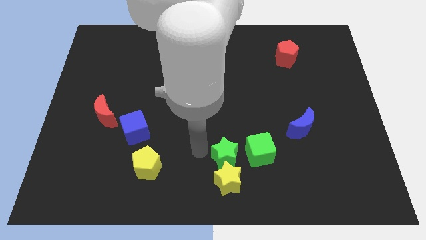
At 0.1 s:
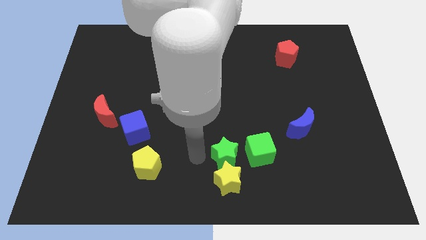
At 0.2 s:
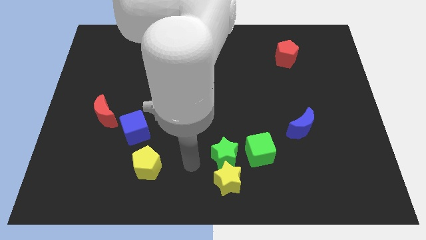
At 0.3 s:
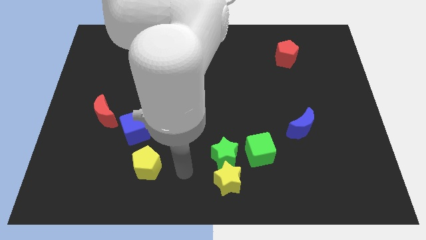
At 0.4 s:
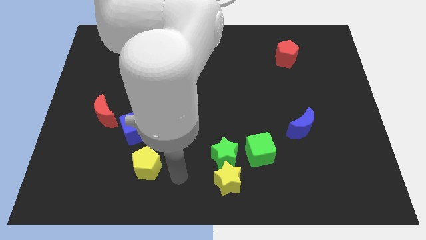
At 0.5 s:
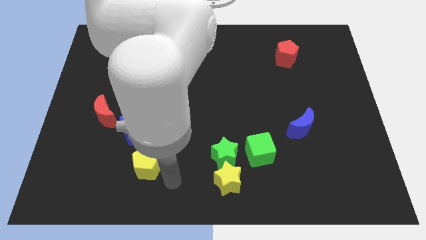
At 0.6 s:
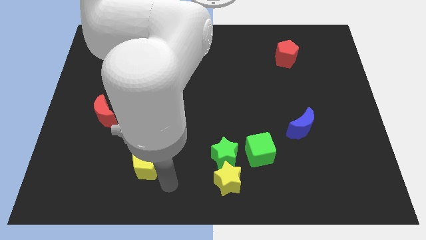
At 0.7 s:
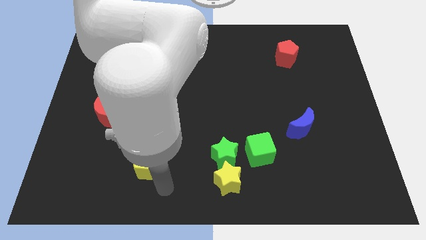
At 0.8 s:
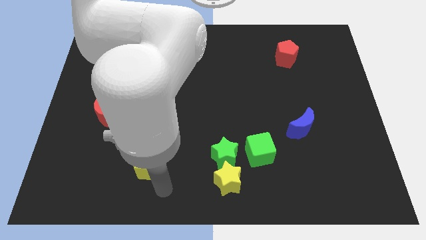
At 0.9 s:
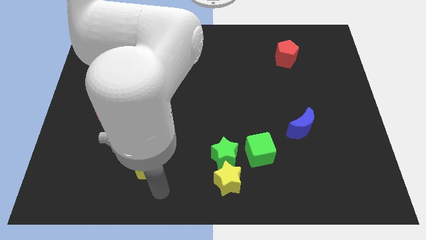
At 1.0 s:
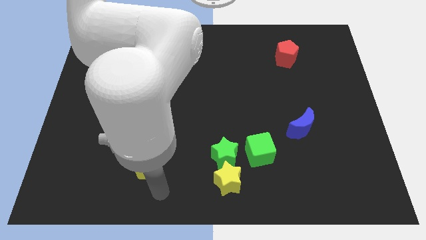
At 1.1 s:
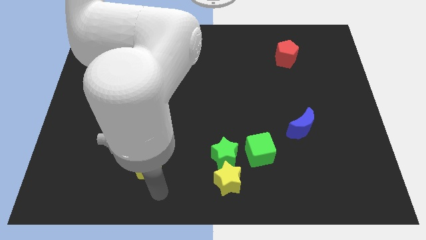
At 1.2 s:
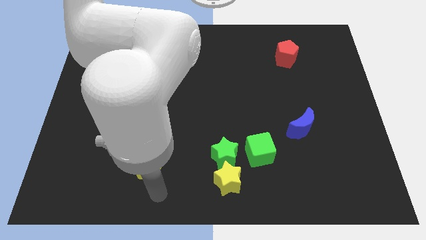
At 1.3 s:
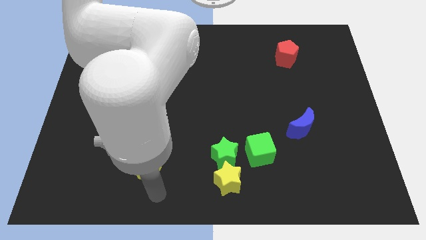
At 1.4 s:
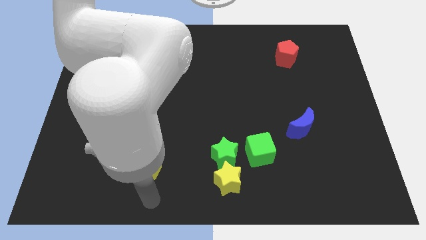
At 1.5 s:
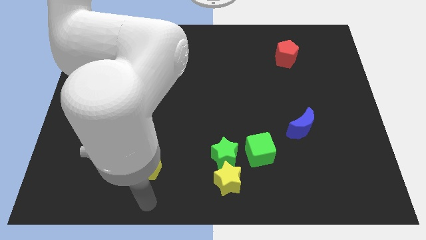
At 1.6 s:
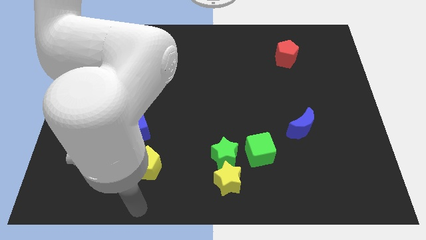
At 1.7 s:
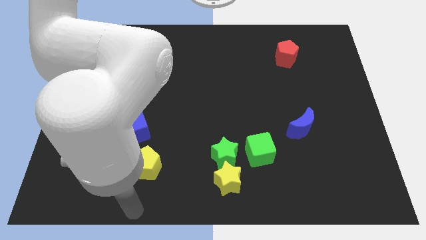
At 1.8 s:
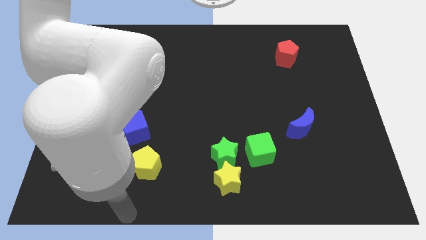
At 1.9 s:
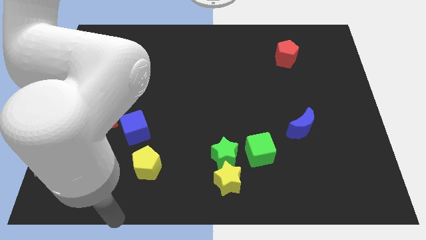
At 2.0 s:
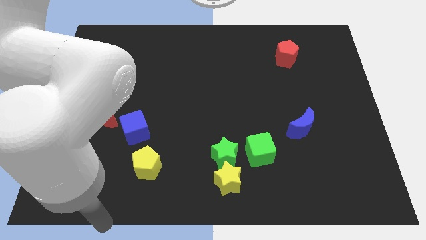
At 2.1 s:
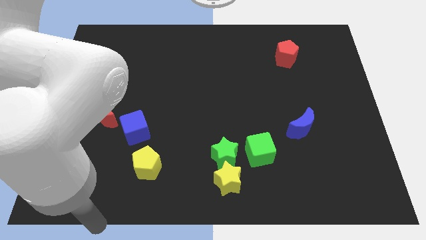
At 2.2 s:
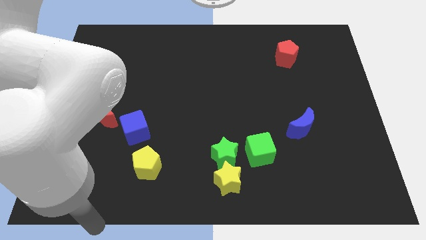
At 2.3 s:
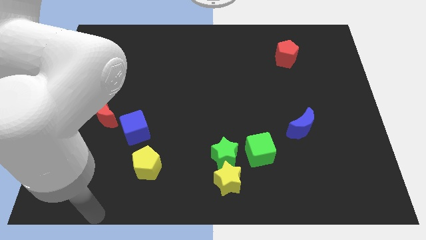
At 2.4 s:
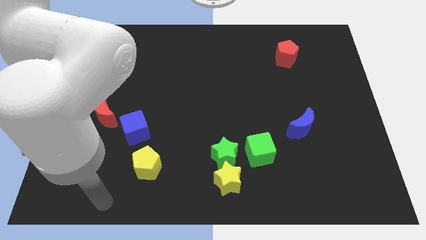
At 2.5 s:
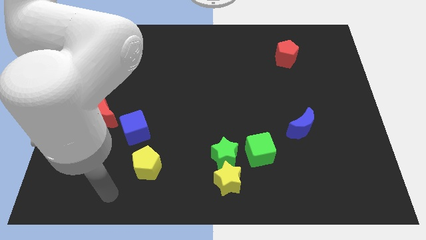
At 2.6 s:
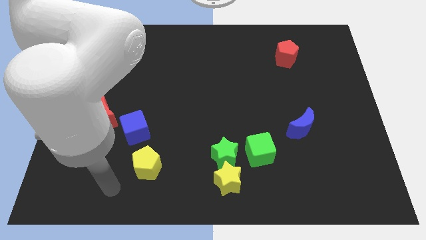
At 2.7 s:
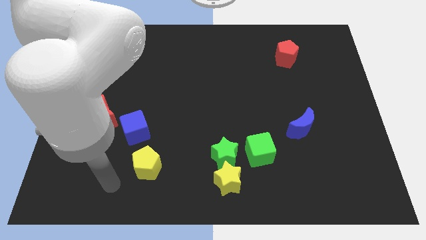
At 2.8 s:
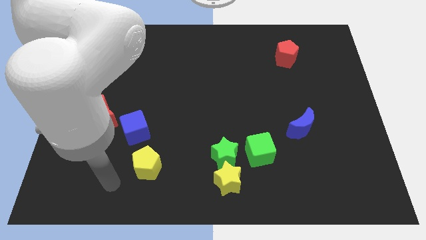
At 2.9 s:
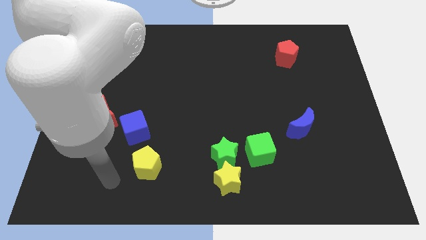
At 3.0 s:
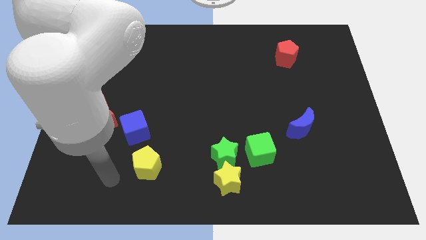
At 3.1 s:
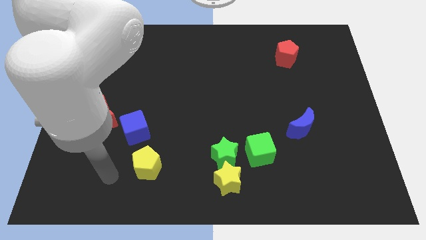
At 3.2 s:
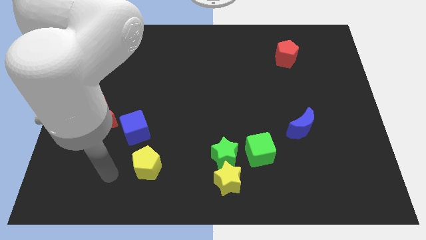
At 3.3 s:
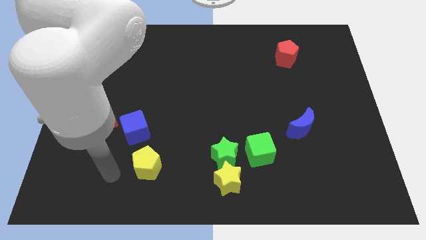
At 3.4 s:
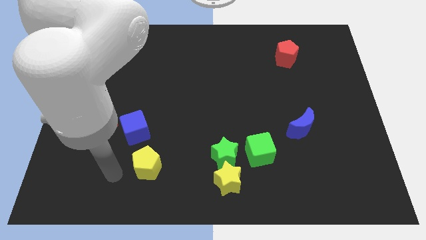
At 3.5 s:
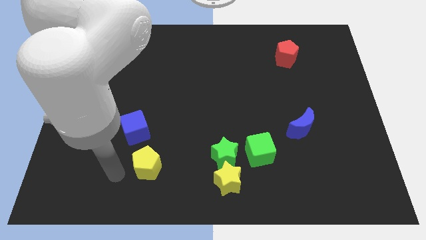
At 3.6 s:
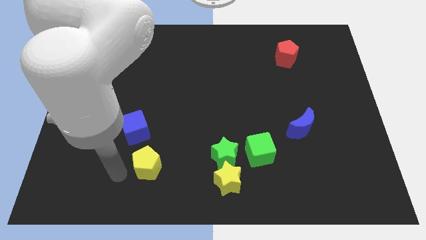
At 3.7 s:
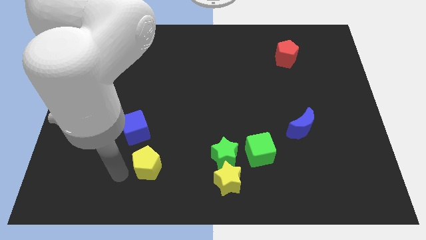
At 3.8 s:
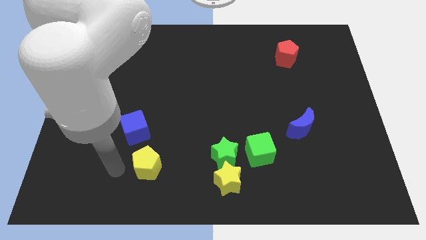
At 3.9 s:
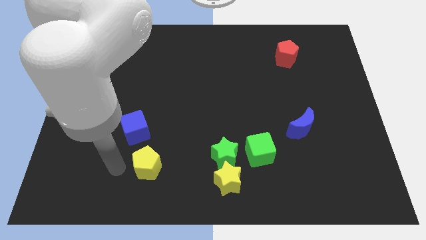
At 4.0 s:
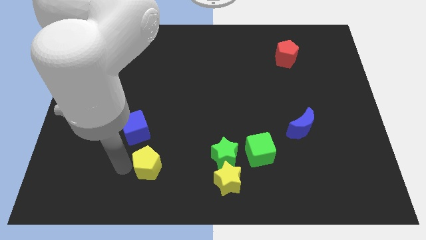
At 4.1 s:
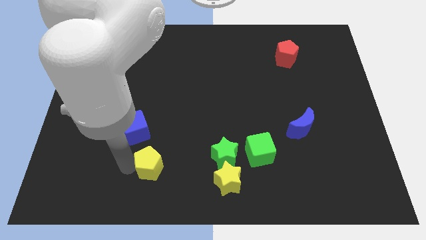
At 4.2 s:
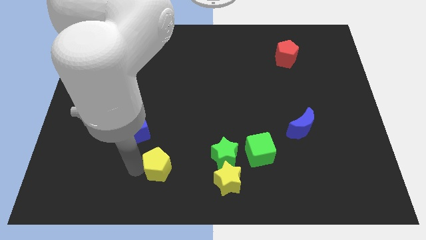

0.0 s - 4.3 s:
tab the left side of the yellow pentagon

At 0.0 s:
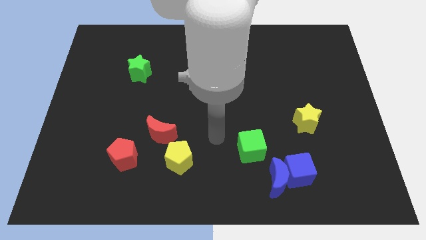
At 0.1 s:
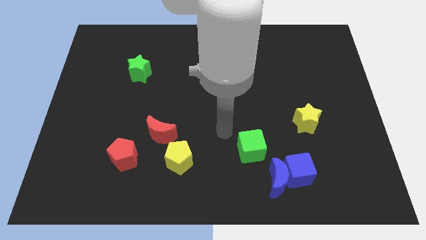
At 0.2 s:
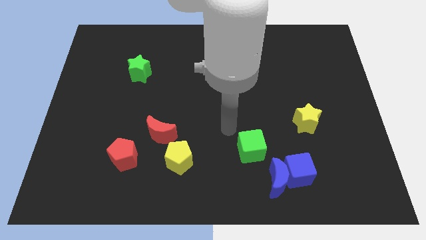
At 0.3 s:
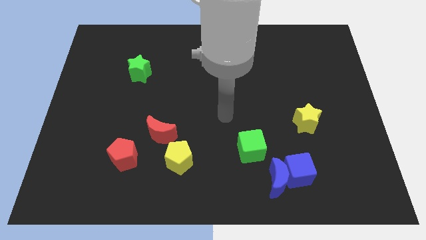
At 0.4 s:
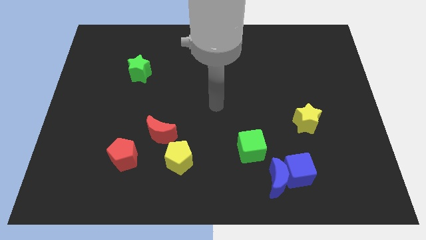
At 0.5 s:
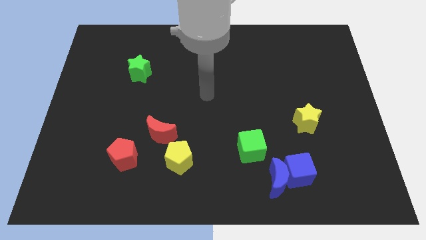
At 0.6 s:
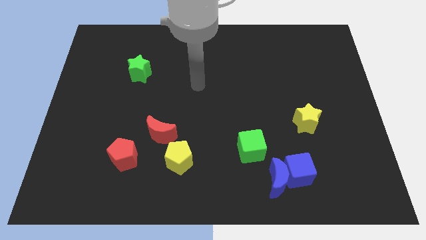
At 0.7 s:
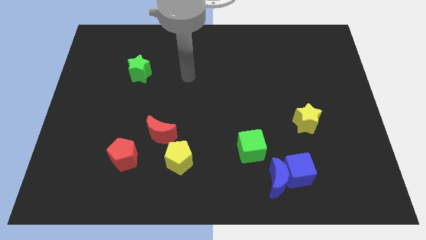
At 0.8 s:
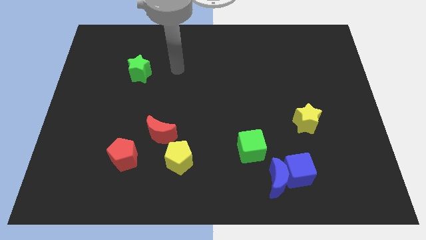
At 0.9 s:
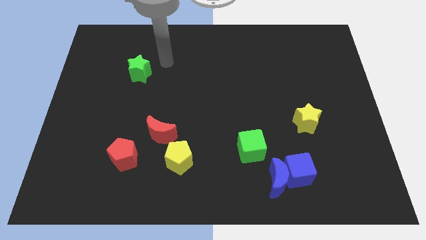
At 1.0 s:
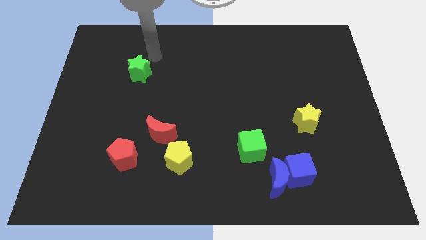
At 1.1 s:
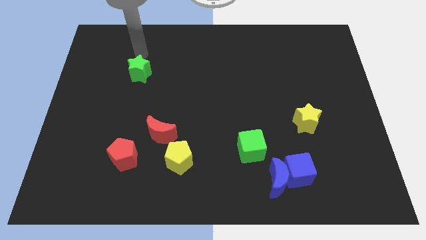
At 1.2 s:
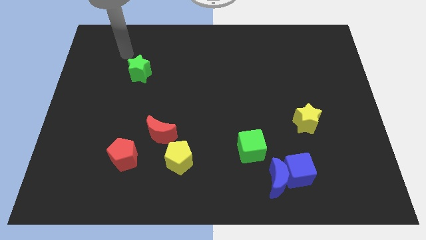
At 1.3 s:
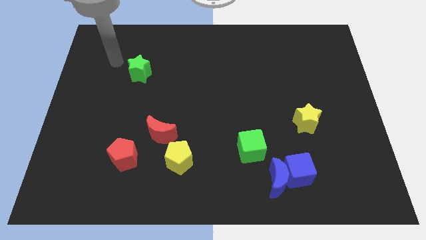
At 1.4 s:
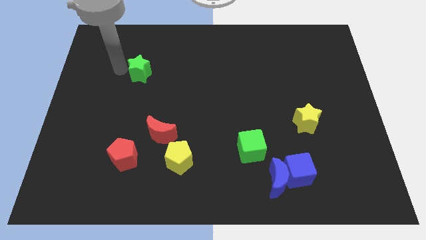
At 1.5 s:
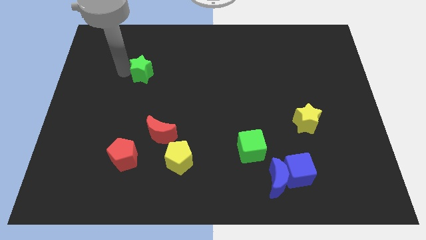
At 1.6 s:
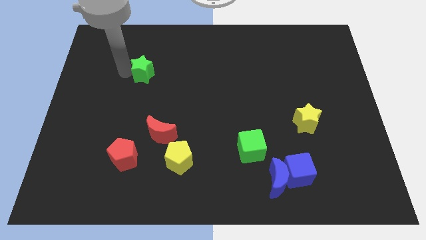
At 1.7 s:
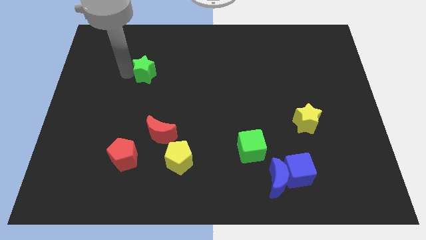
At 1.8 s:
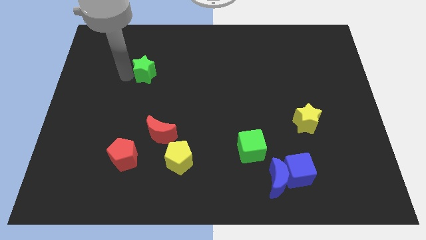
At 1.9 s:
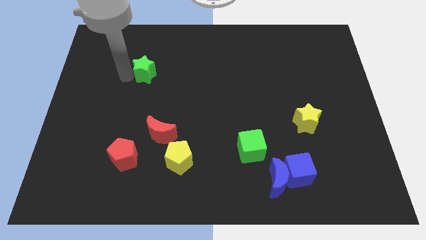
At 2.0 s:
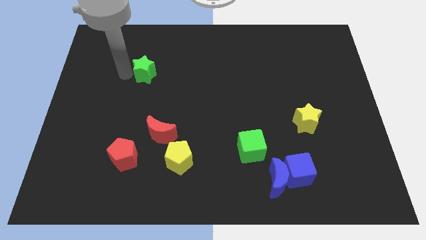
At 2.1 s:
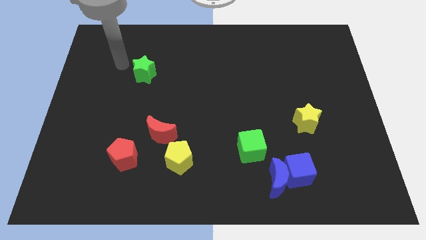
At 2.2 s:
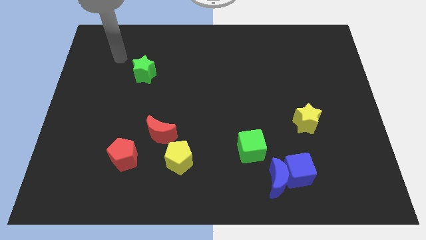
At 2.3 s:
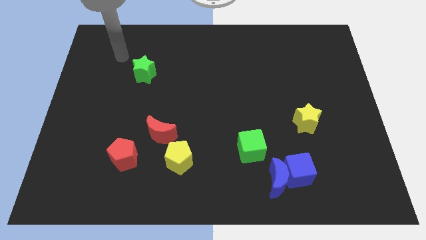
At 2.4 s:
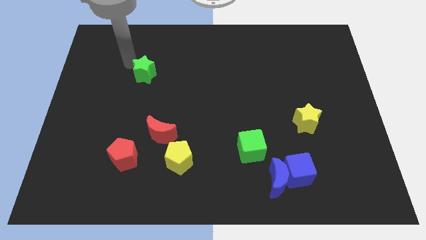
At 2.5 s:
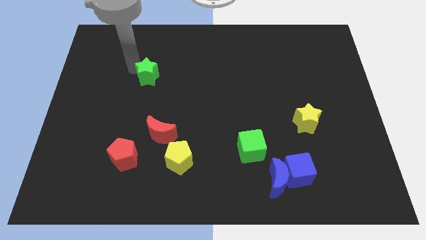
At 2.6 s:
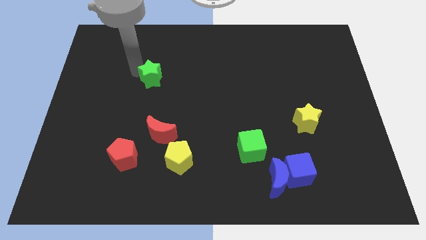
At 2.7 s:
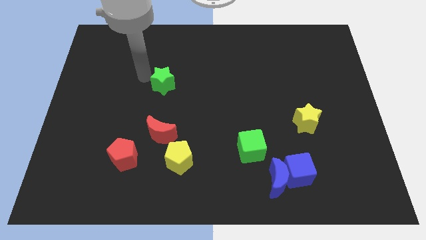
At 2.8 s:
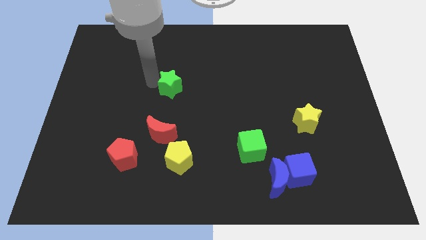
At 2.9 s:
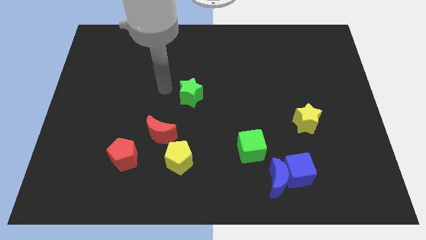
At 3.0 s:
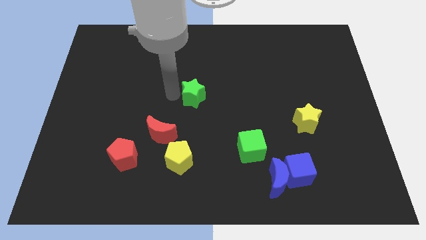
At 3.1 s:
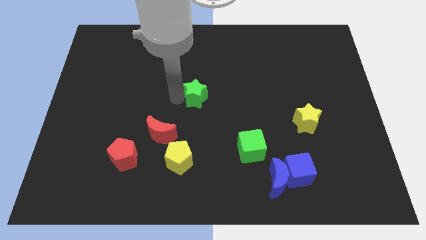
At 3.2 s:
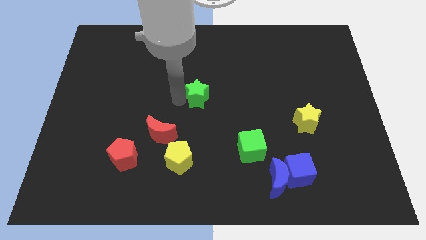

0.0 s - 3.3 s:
move the green star to the center

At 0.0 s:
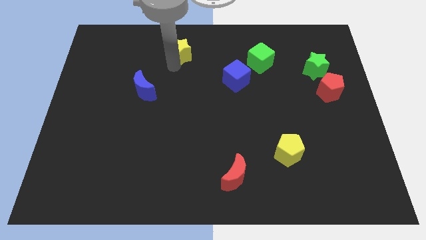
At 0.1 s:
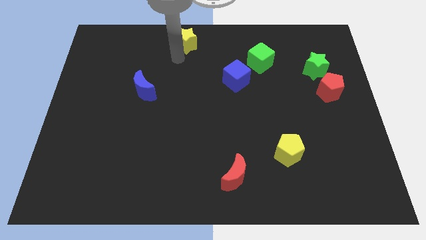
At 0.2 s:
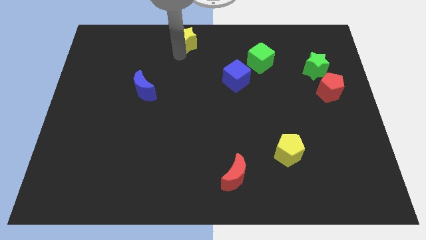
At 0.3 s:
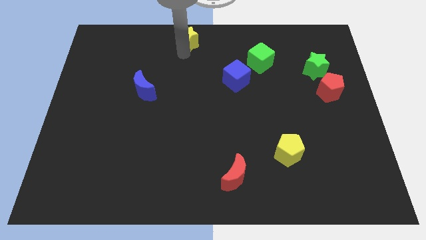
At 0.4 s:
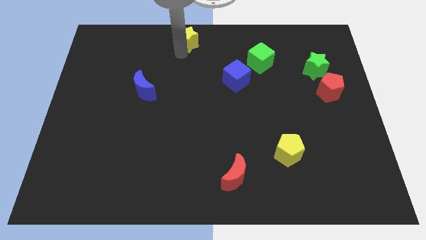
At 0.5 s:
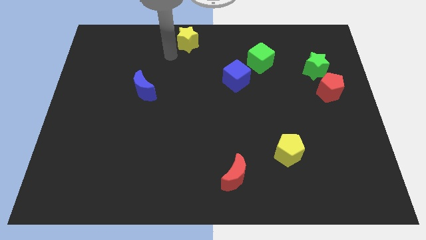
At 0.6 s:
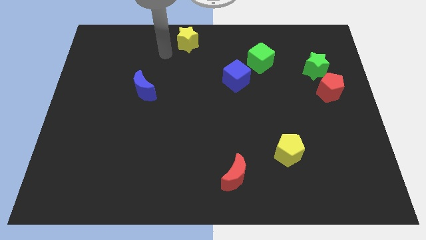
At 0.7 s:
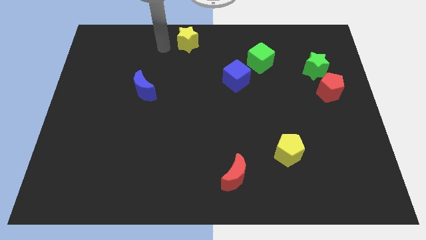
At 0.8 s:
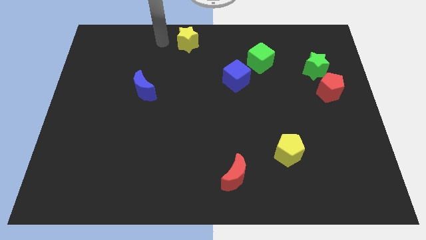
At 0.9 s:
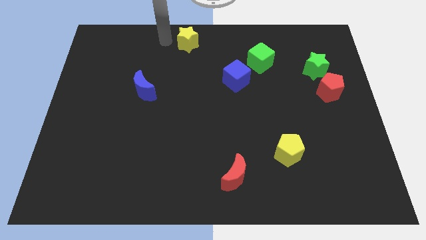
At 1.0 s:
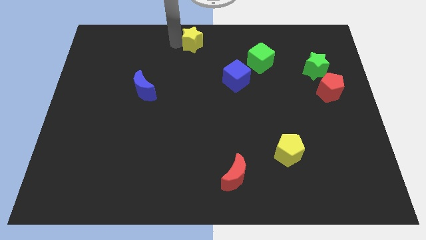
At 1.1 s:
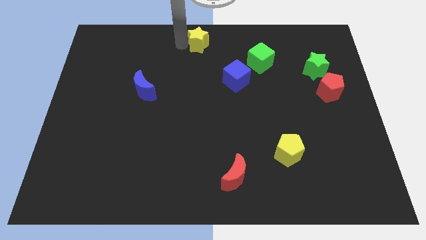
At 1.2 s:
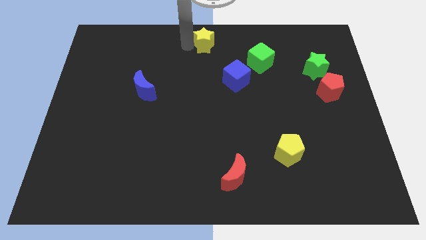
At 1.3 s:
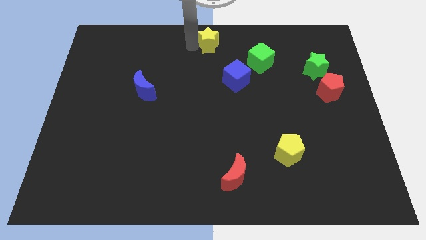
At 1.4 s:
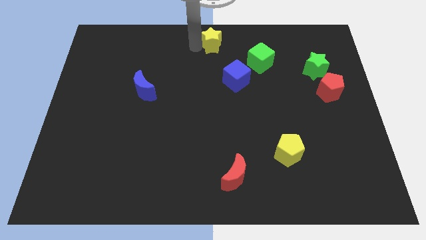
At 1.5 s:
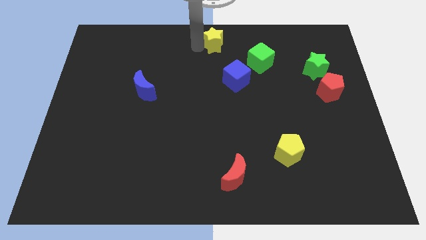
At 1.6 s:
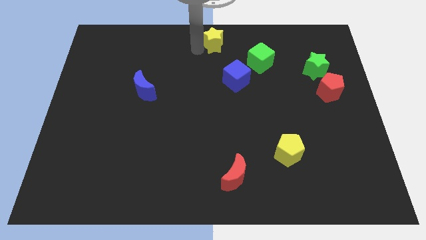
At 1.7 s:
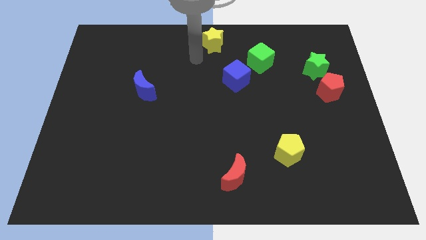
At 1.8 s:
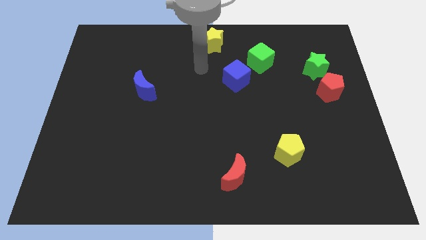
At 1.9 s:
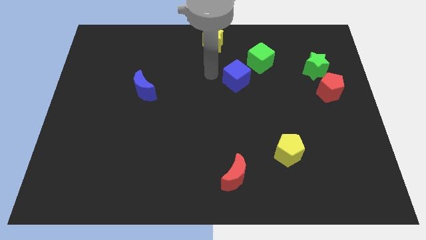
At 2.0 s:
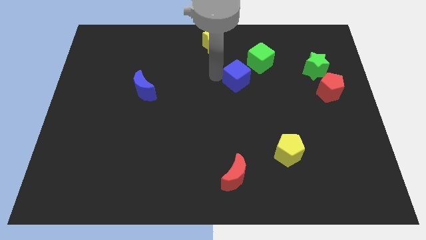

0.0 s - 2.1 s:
slide yellow star towards top center
